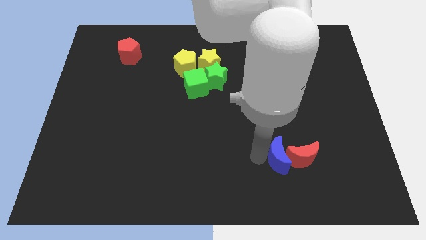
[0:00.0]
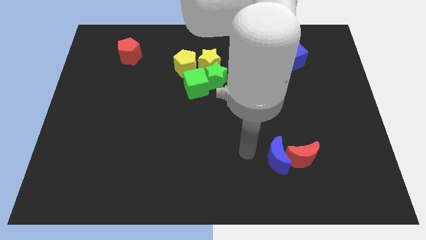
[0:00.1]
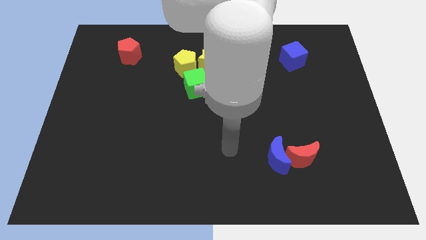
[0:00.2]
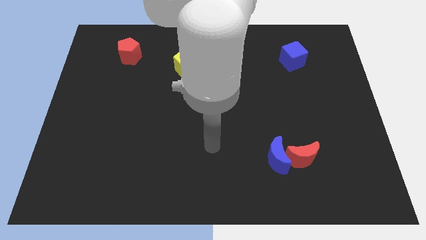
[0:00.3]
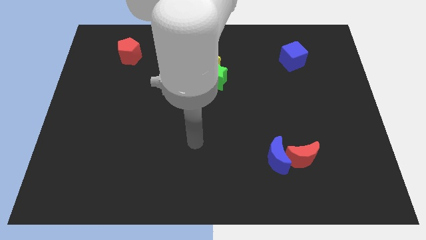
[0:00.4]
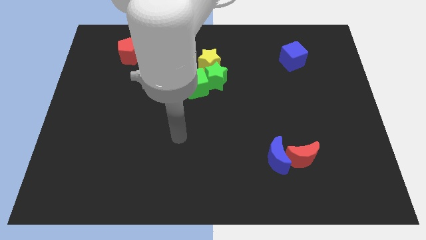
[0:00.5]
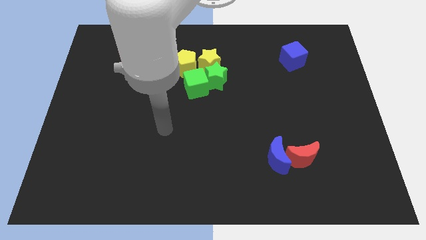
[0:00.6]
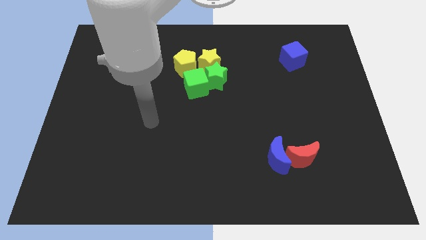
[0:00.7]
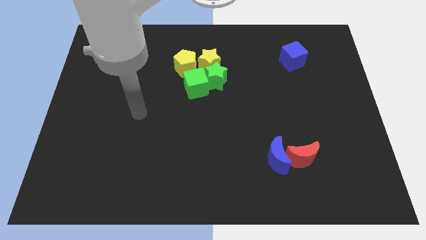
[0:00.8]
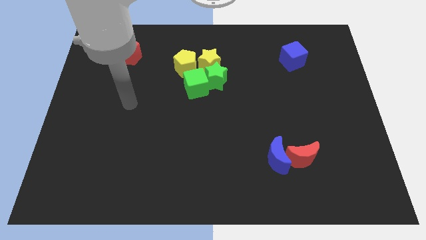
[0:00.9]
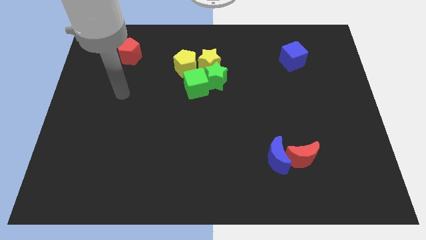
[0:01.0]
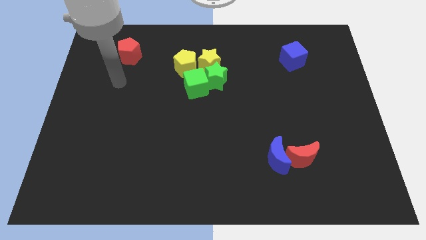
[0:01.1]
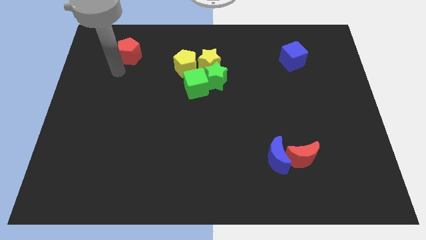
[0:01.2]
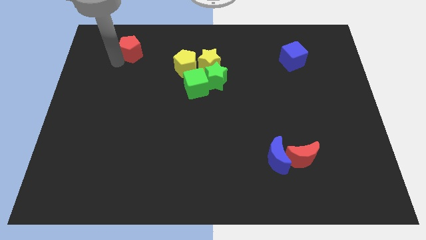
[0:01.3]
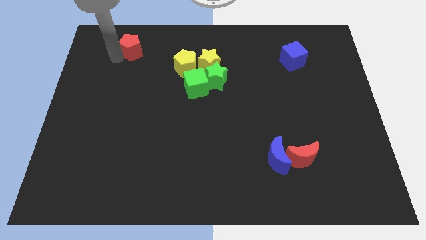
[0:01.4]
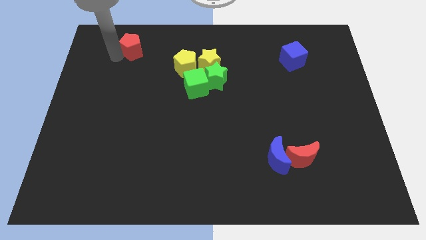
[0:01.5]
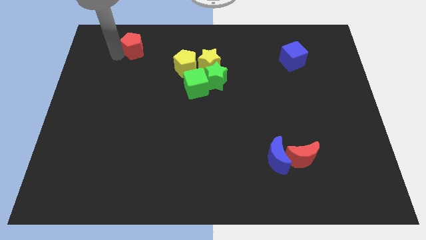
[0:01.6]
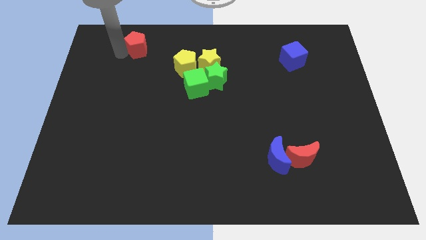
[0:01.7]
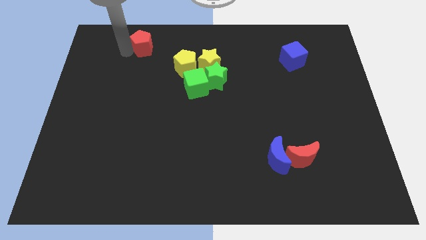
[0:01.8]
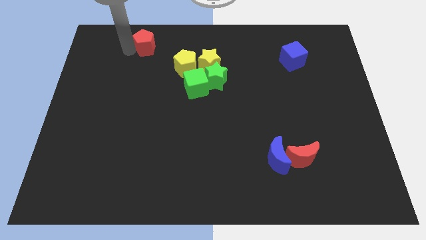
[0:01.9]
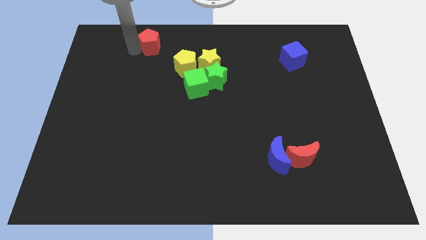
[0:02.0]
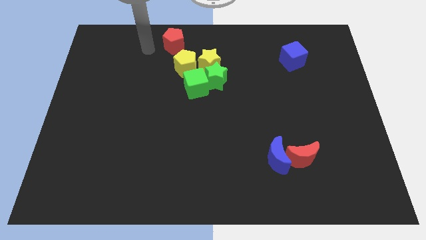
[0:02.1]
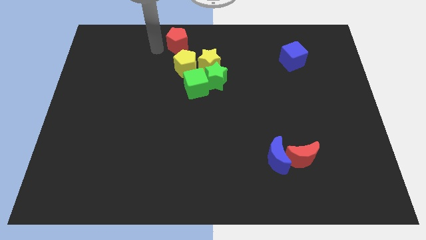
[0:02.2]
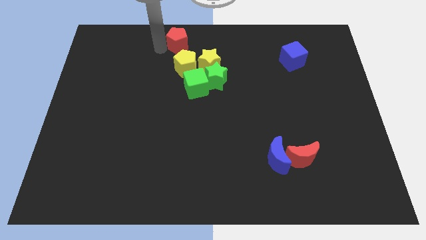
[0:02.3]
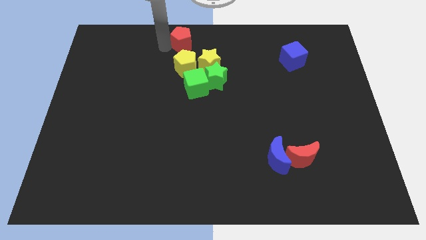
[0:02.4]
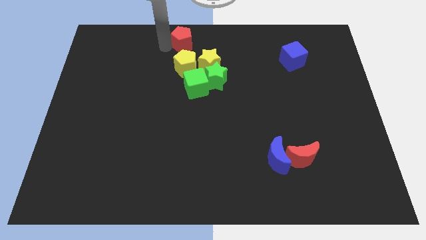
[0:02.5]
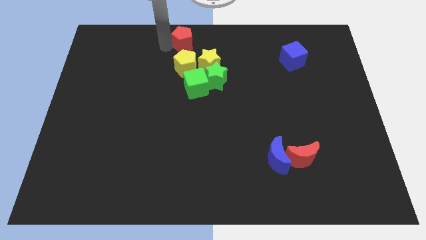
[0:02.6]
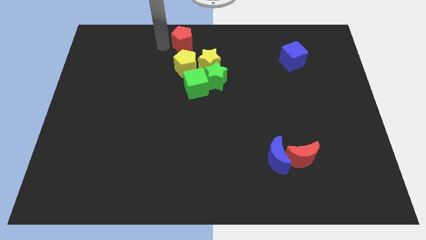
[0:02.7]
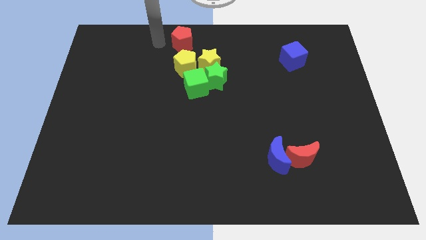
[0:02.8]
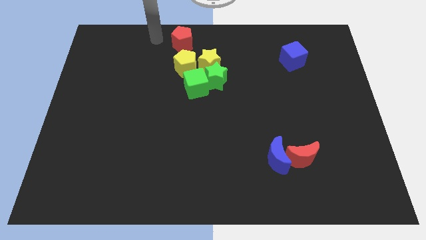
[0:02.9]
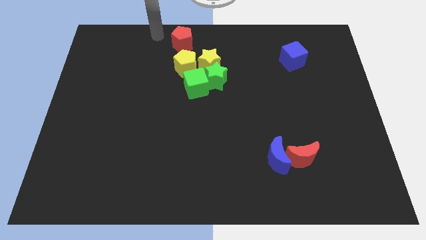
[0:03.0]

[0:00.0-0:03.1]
put the red pentagon above the yellow pentagon

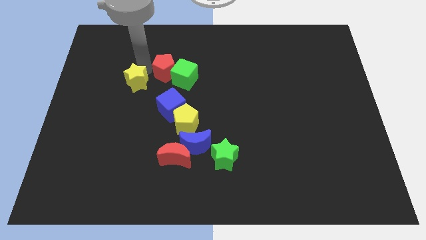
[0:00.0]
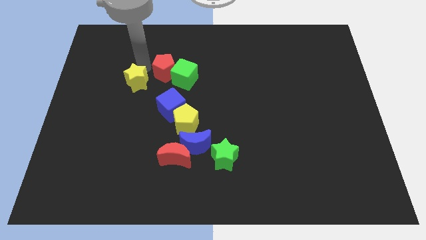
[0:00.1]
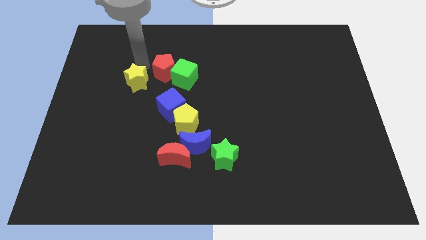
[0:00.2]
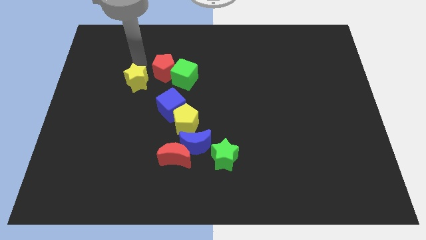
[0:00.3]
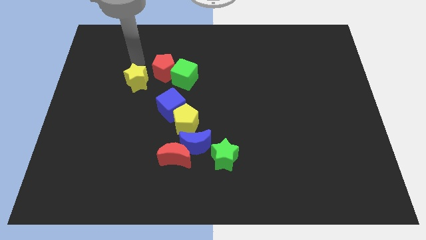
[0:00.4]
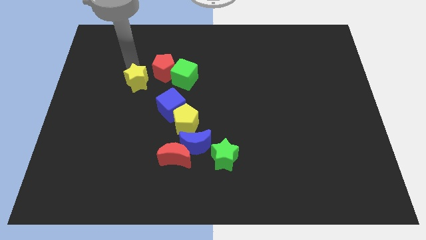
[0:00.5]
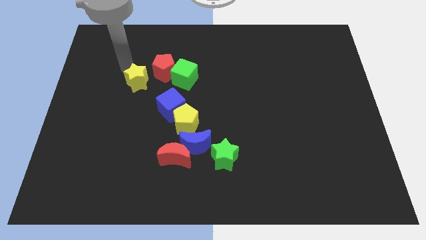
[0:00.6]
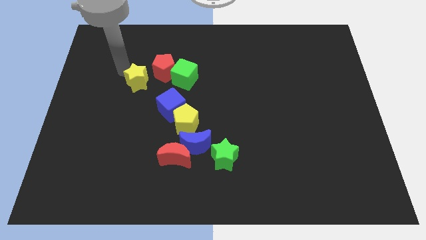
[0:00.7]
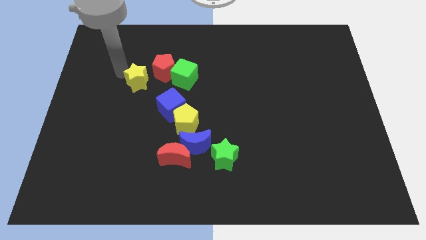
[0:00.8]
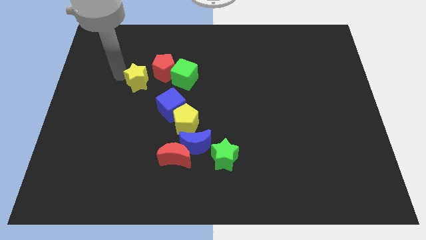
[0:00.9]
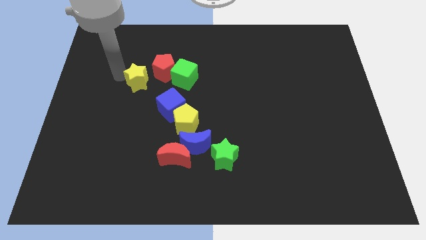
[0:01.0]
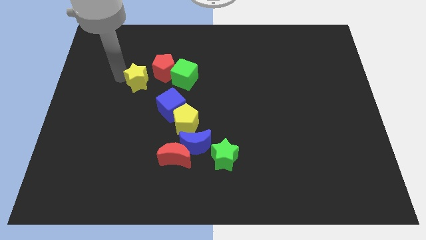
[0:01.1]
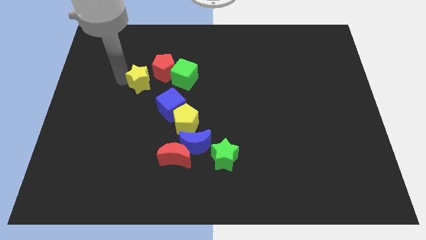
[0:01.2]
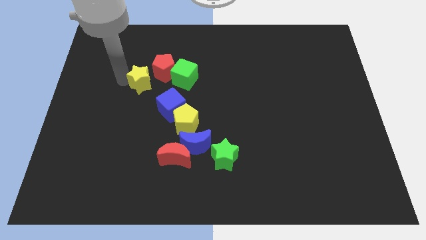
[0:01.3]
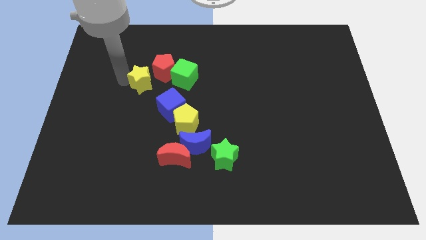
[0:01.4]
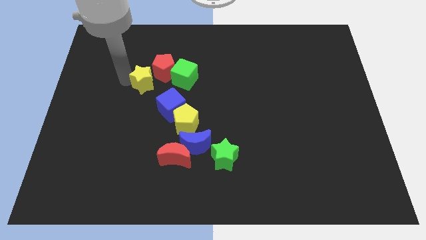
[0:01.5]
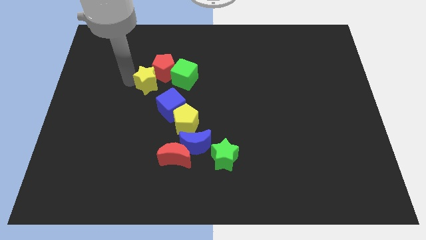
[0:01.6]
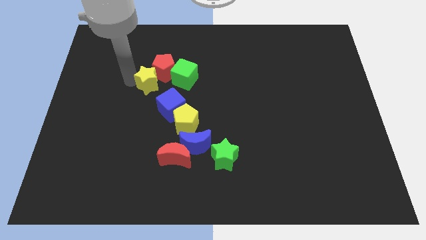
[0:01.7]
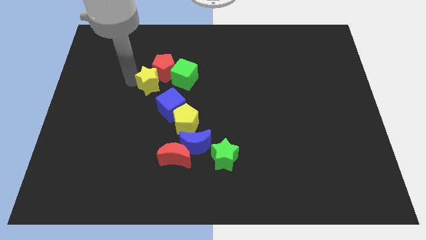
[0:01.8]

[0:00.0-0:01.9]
place the yellow star diagonally to the red pentagon

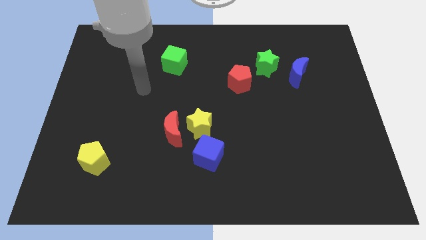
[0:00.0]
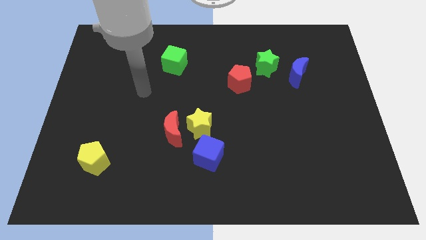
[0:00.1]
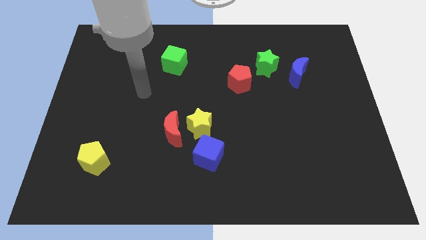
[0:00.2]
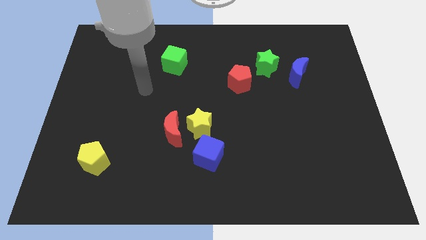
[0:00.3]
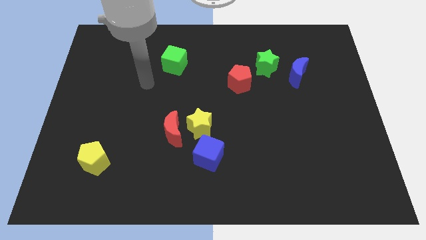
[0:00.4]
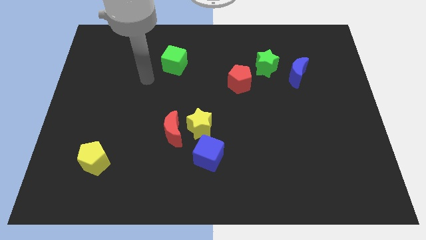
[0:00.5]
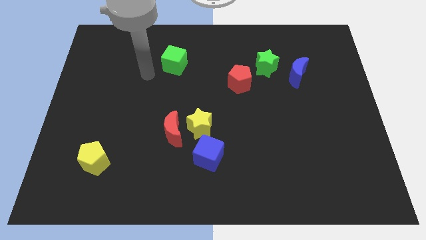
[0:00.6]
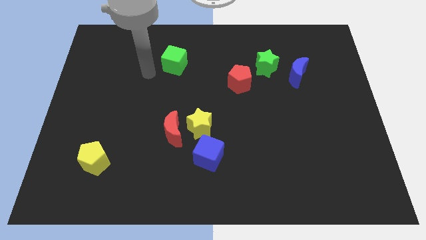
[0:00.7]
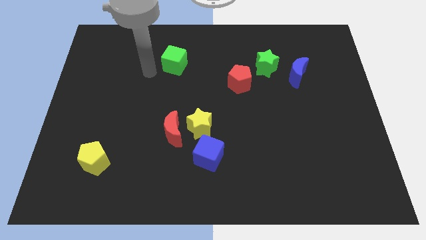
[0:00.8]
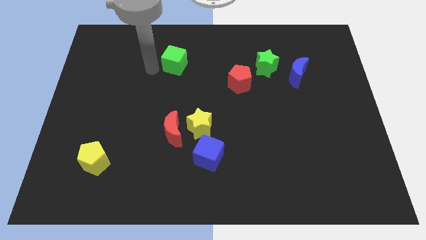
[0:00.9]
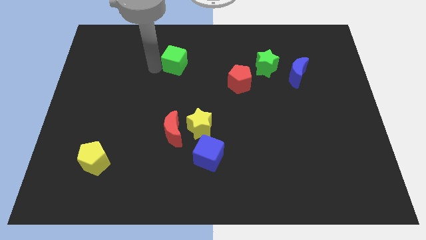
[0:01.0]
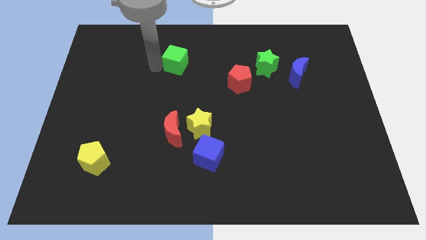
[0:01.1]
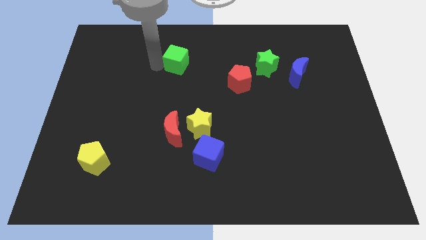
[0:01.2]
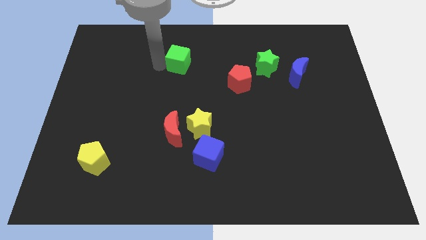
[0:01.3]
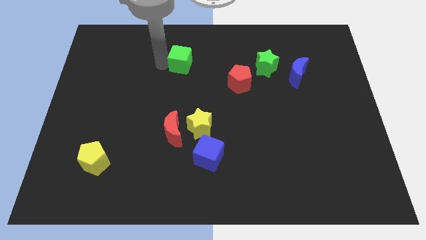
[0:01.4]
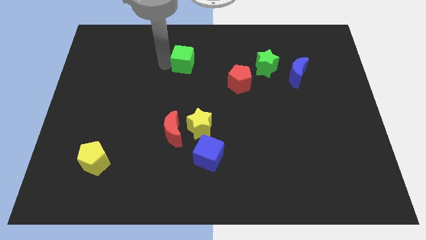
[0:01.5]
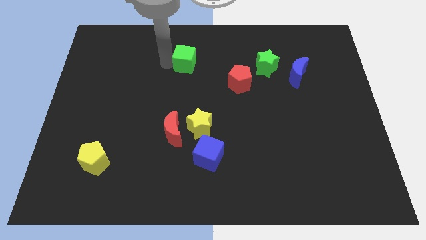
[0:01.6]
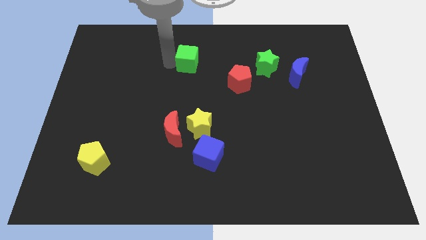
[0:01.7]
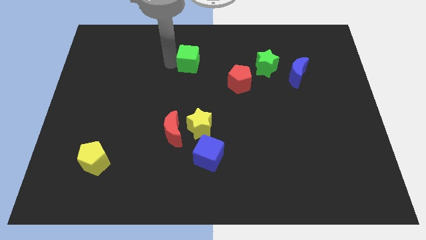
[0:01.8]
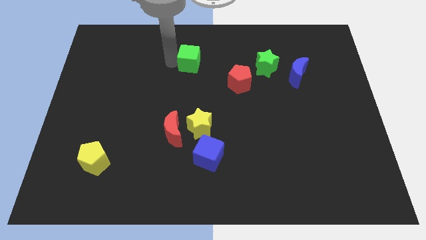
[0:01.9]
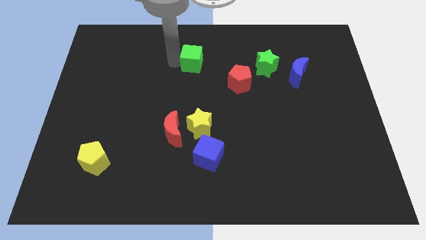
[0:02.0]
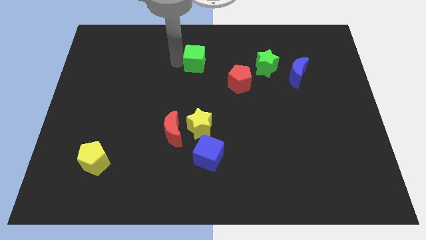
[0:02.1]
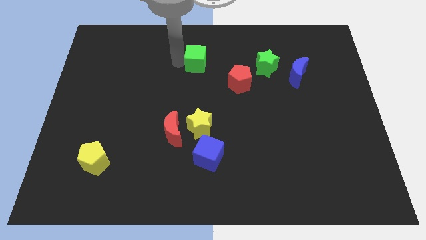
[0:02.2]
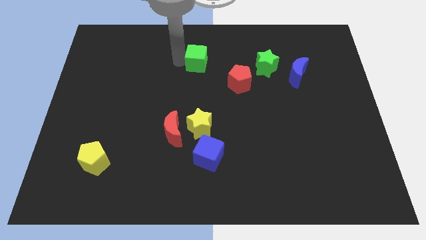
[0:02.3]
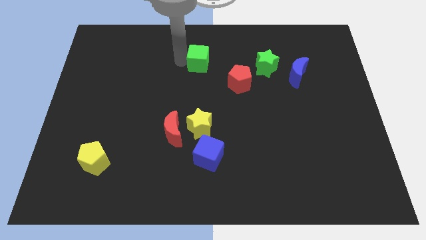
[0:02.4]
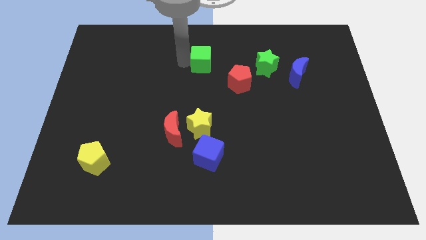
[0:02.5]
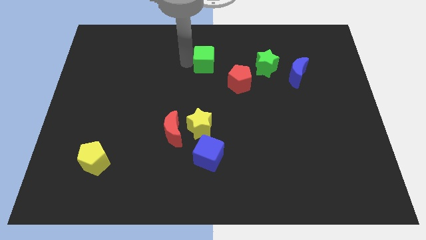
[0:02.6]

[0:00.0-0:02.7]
move the green cube vertical to the yellow star

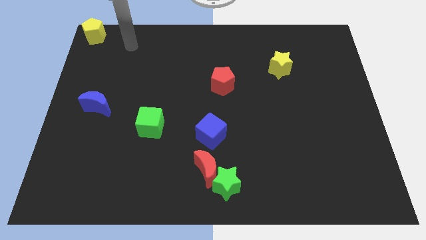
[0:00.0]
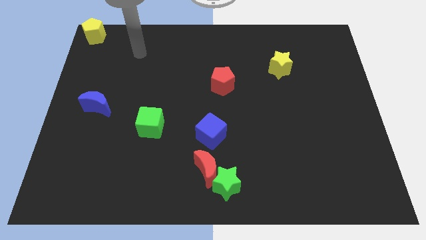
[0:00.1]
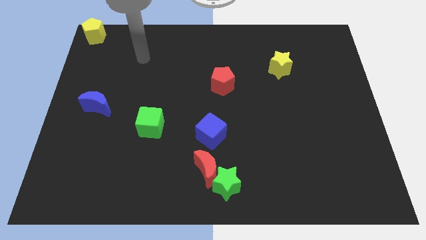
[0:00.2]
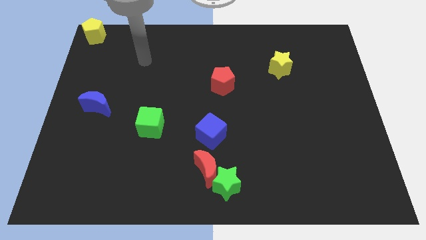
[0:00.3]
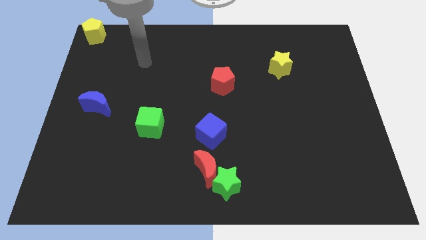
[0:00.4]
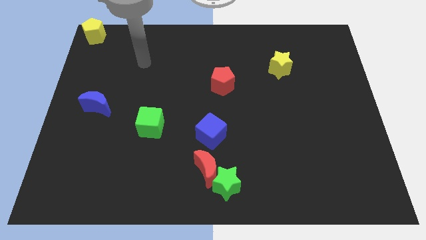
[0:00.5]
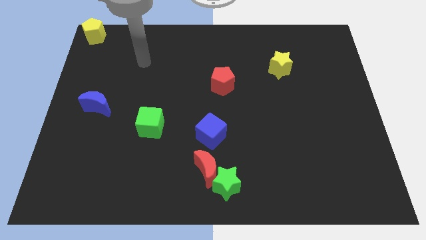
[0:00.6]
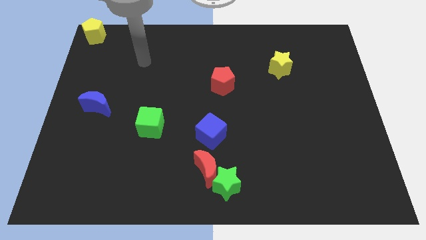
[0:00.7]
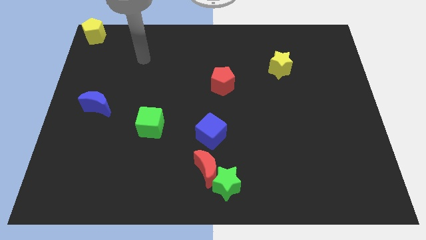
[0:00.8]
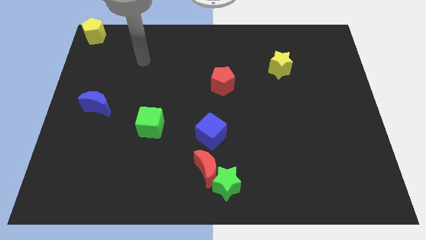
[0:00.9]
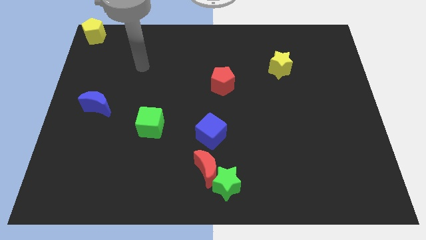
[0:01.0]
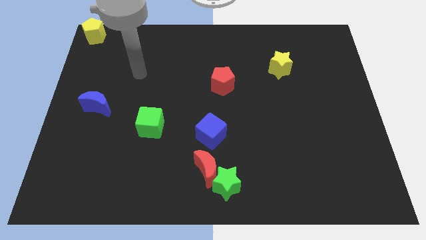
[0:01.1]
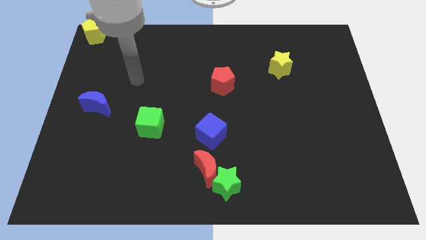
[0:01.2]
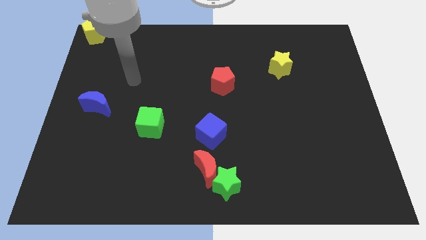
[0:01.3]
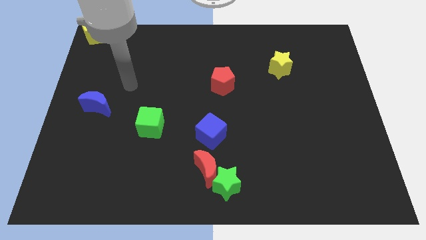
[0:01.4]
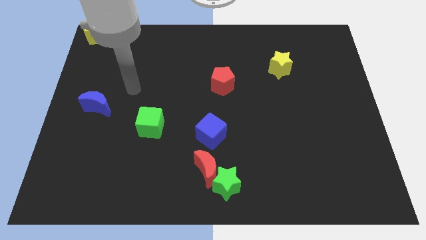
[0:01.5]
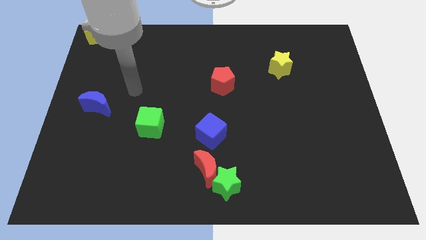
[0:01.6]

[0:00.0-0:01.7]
move your arm to the top of the green cube
